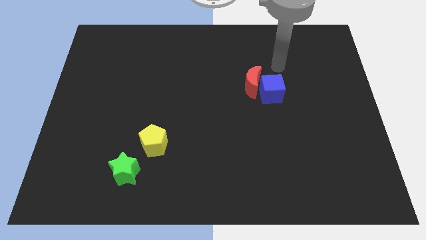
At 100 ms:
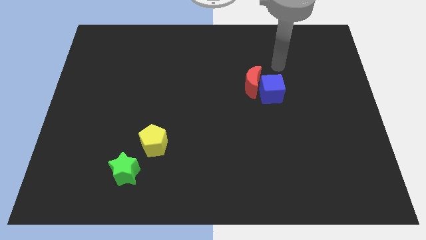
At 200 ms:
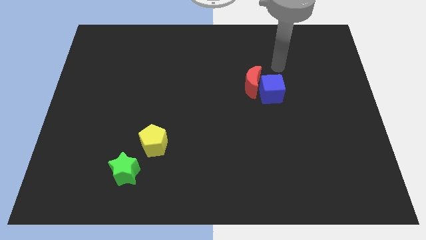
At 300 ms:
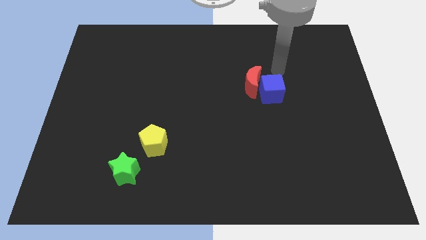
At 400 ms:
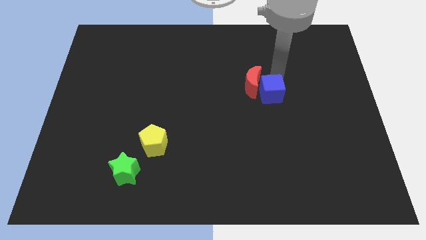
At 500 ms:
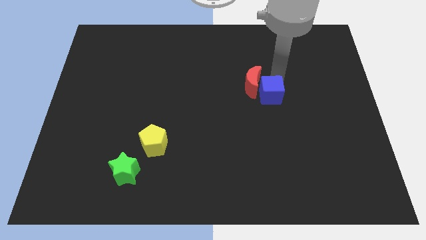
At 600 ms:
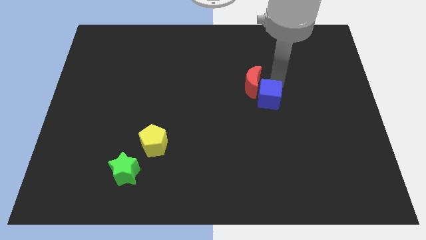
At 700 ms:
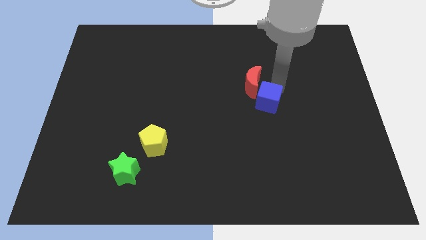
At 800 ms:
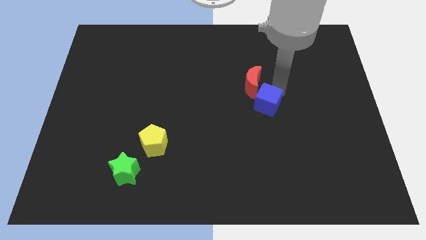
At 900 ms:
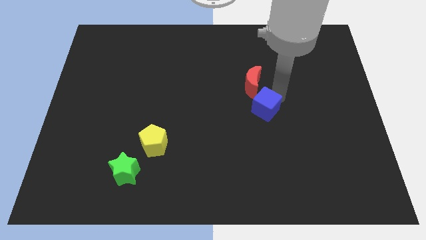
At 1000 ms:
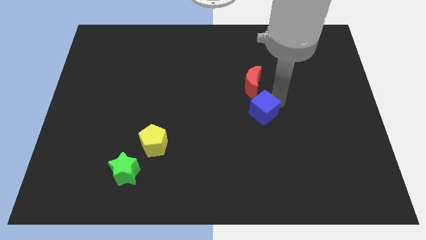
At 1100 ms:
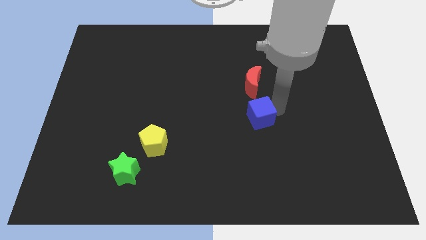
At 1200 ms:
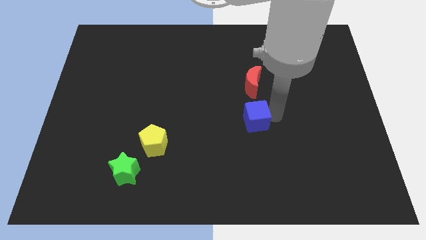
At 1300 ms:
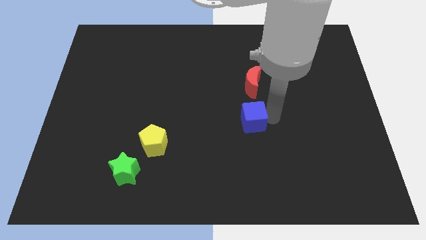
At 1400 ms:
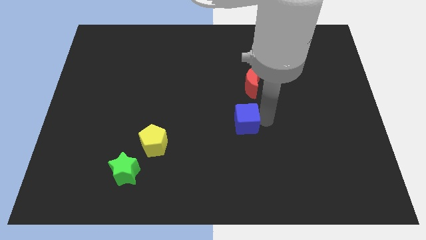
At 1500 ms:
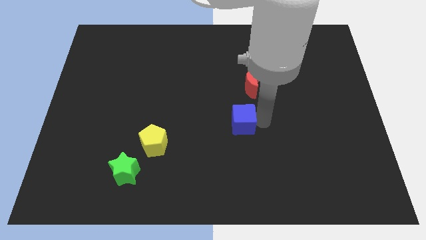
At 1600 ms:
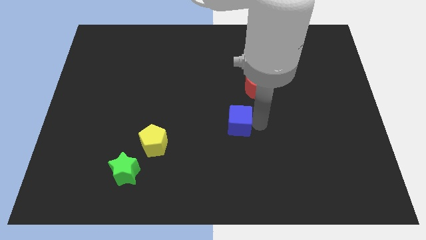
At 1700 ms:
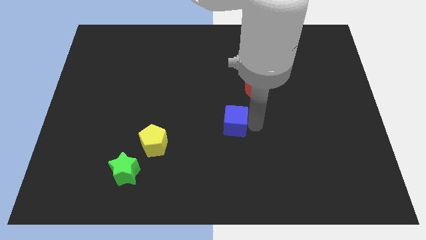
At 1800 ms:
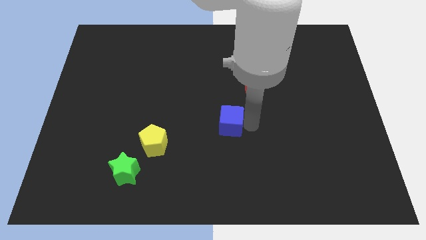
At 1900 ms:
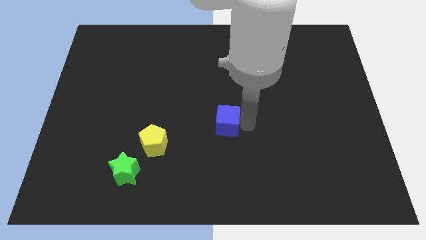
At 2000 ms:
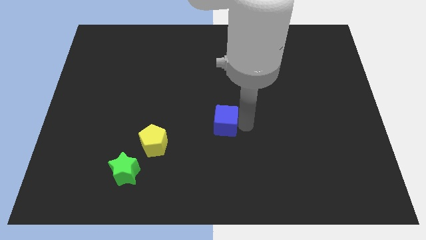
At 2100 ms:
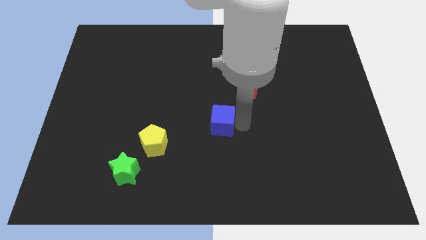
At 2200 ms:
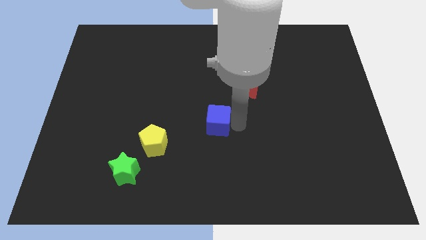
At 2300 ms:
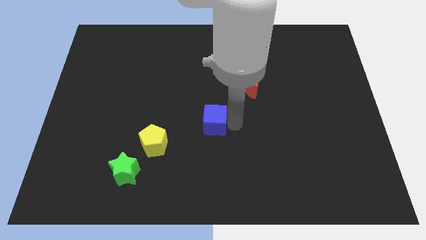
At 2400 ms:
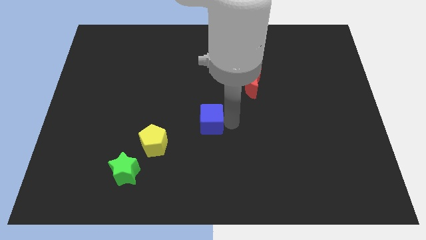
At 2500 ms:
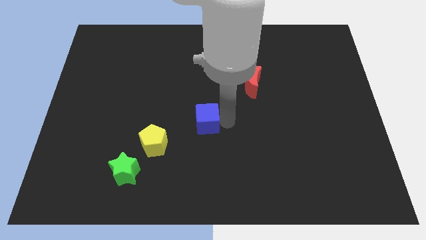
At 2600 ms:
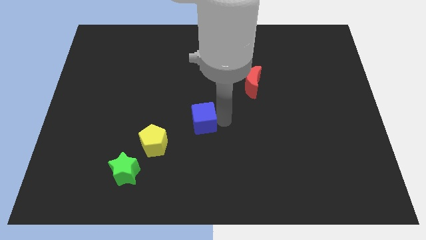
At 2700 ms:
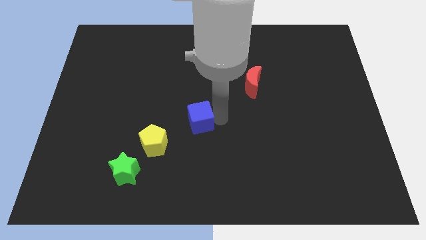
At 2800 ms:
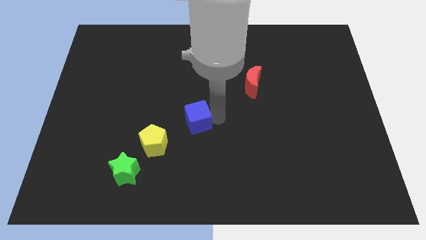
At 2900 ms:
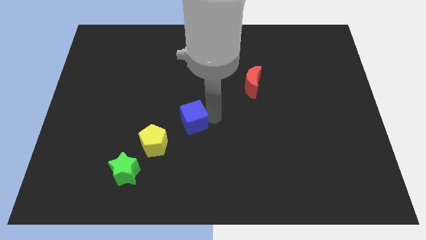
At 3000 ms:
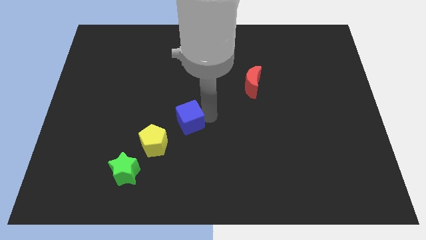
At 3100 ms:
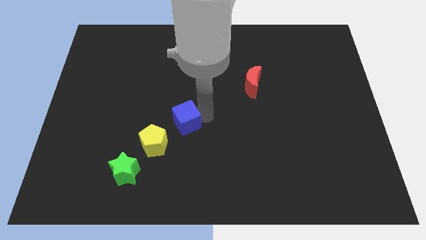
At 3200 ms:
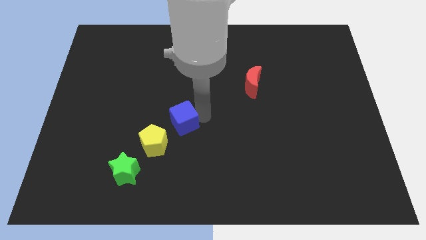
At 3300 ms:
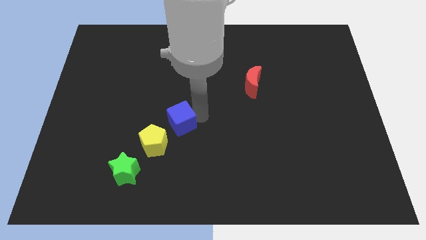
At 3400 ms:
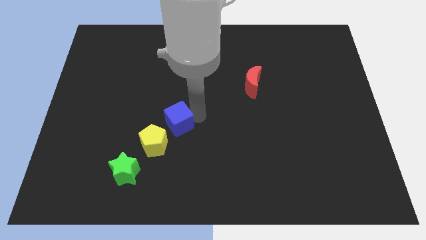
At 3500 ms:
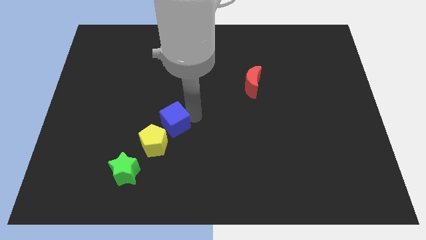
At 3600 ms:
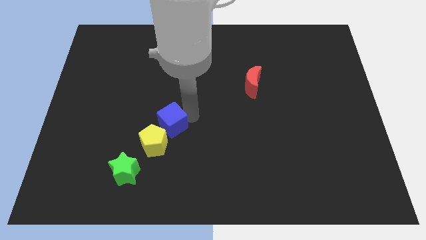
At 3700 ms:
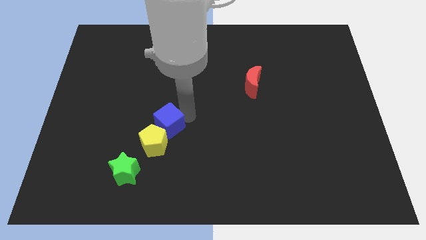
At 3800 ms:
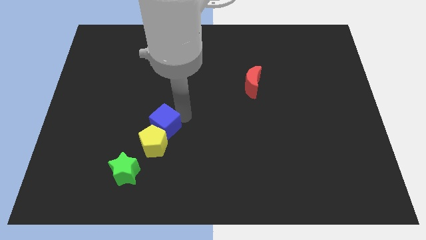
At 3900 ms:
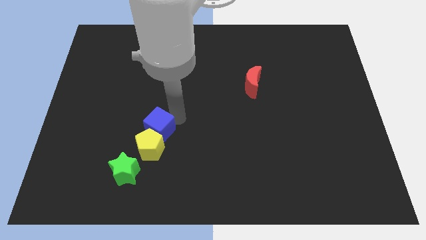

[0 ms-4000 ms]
put the blue cube next to the pentagon

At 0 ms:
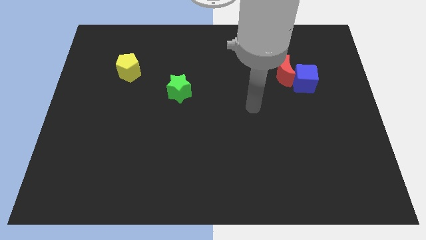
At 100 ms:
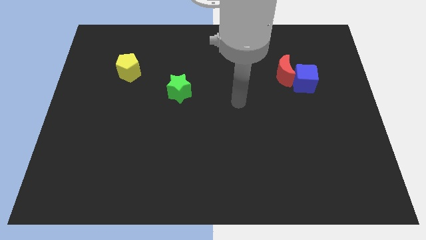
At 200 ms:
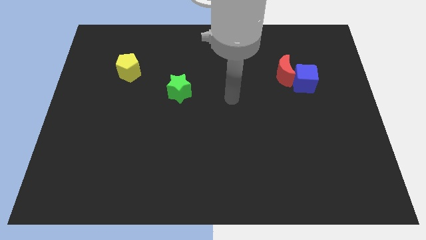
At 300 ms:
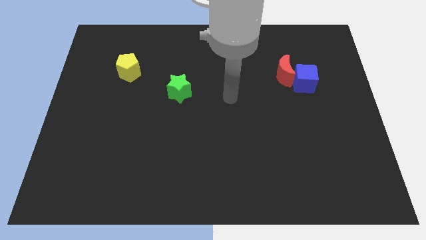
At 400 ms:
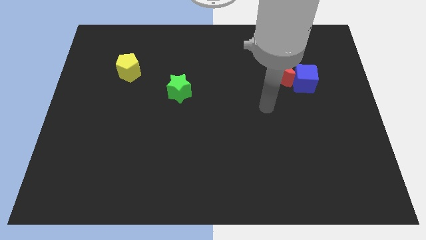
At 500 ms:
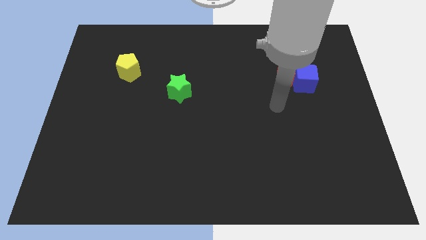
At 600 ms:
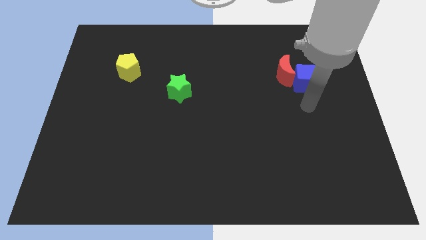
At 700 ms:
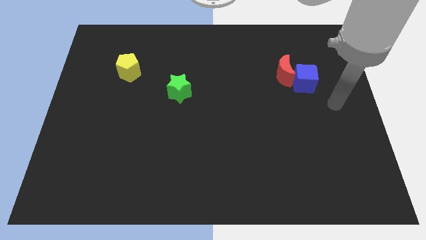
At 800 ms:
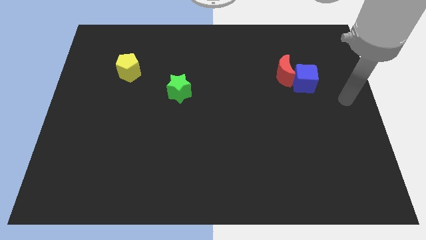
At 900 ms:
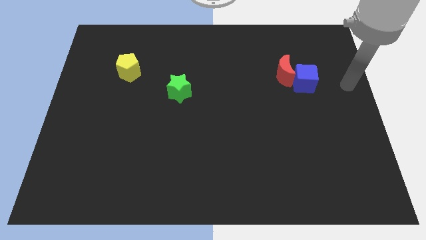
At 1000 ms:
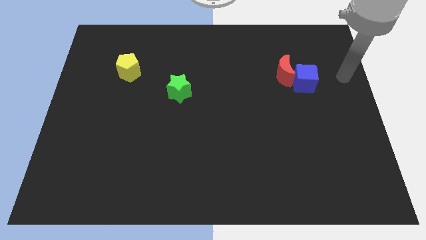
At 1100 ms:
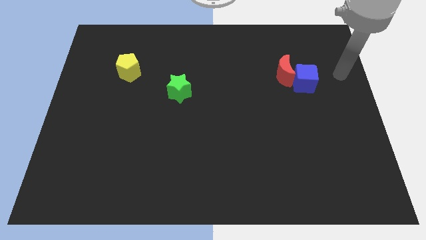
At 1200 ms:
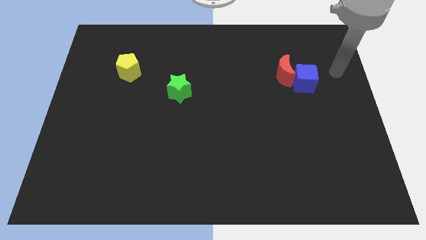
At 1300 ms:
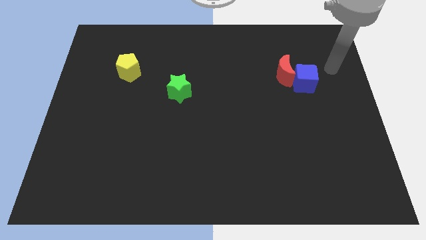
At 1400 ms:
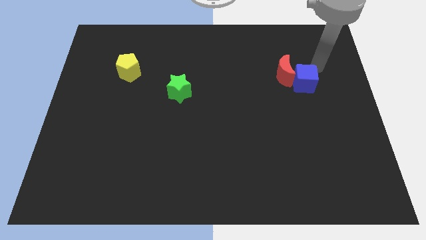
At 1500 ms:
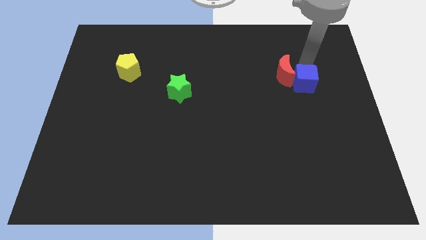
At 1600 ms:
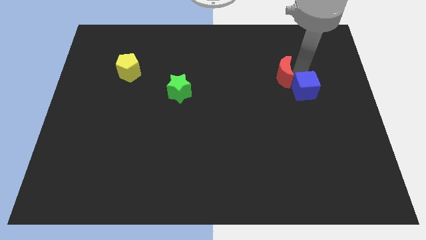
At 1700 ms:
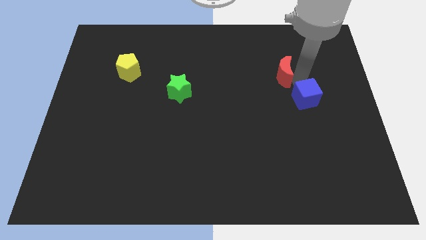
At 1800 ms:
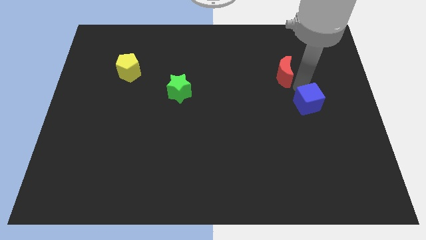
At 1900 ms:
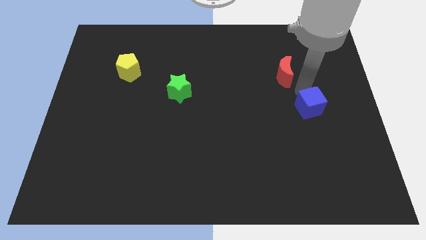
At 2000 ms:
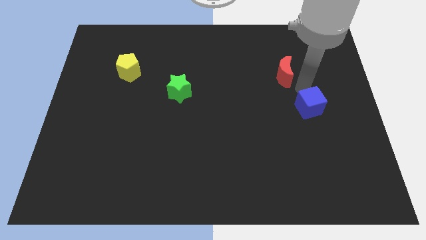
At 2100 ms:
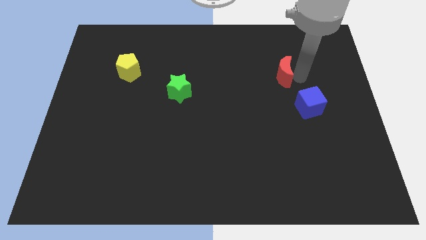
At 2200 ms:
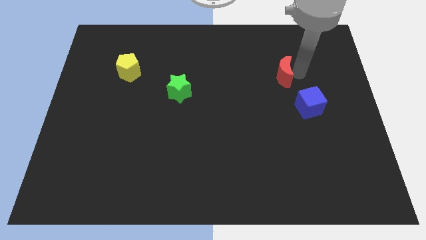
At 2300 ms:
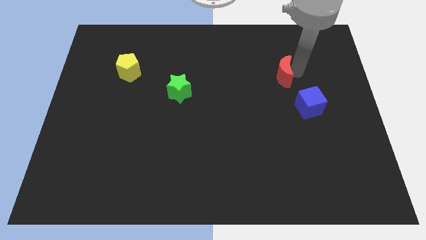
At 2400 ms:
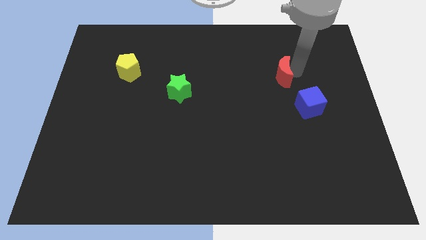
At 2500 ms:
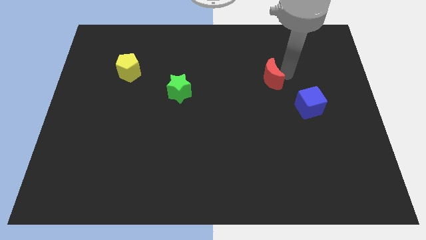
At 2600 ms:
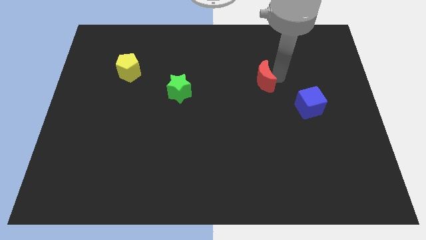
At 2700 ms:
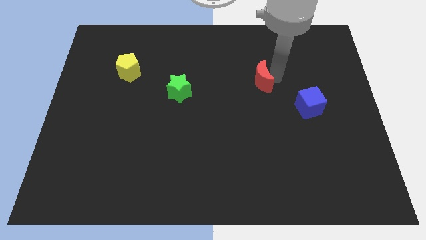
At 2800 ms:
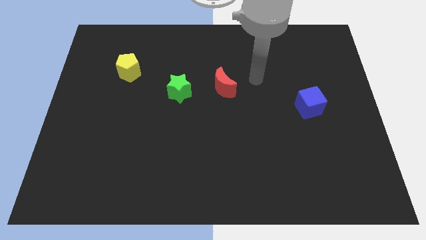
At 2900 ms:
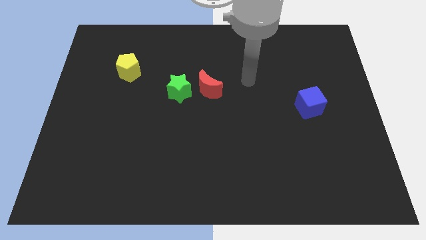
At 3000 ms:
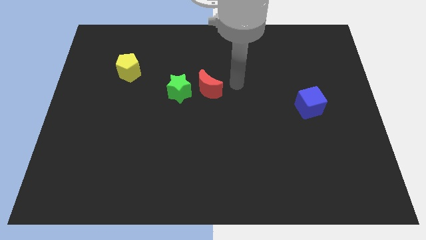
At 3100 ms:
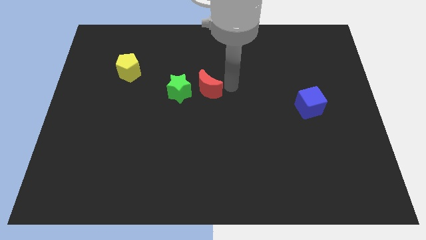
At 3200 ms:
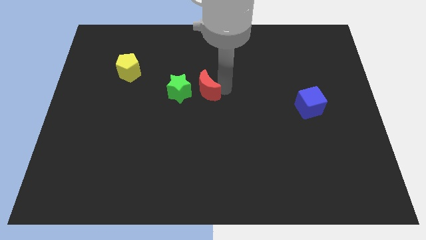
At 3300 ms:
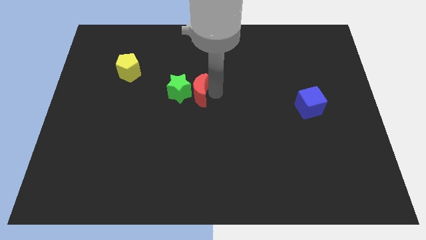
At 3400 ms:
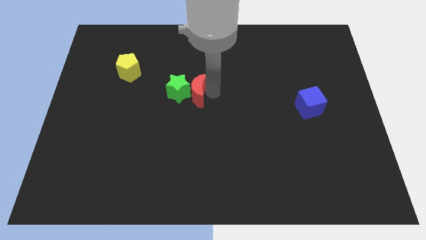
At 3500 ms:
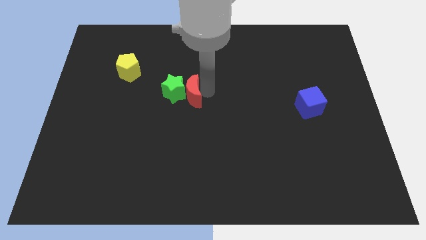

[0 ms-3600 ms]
put the red block close to the green block

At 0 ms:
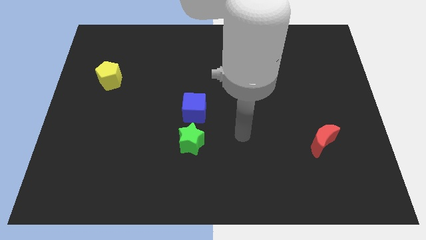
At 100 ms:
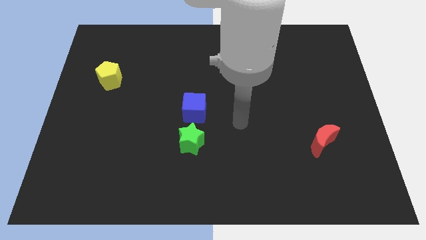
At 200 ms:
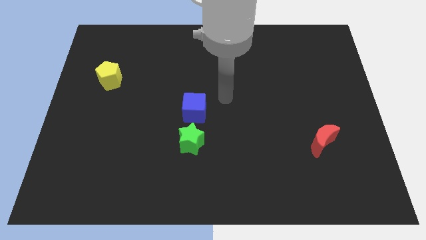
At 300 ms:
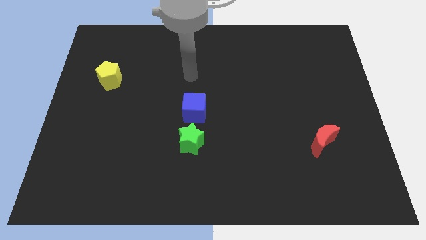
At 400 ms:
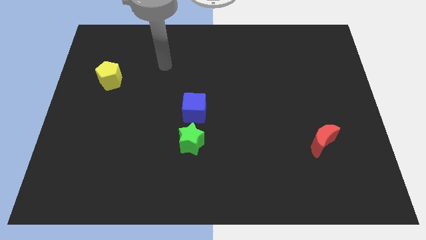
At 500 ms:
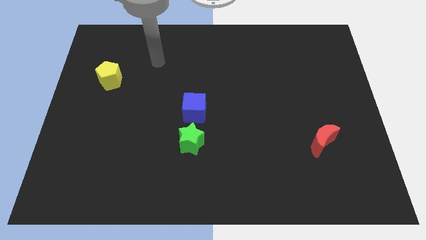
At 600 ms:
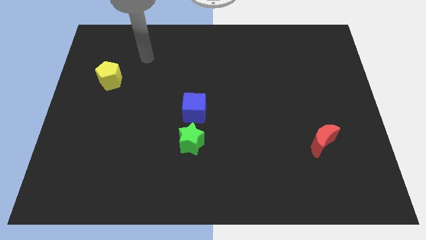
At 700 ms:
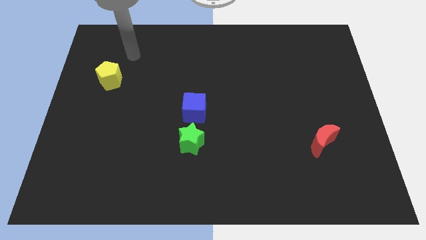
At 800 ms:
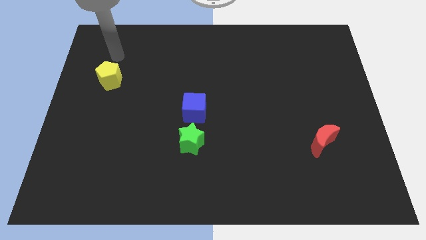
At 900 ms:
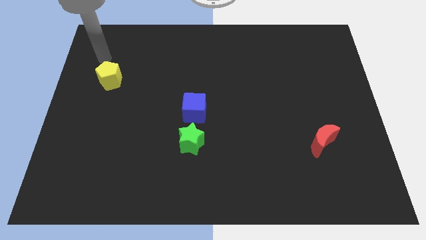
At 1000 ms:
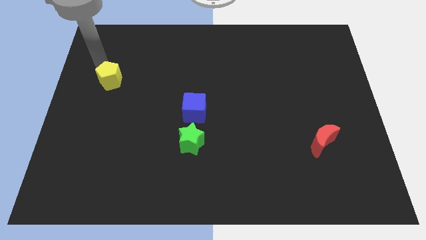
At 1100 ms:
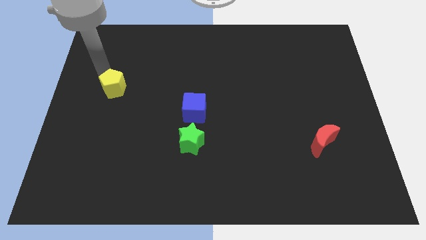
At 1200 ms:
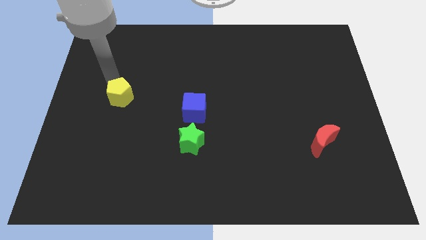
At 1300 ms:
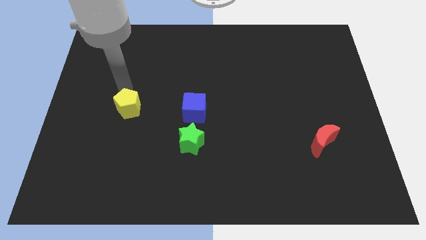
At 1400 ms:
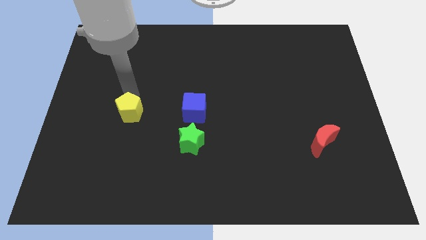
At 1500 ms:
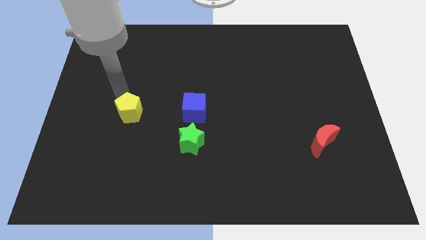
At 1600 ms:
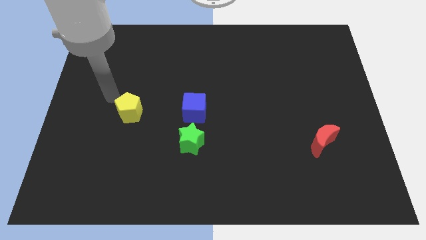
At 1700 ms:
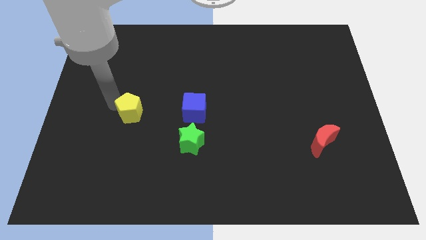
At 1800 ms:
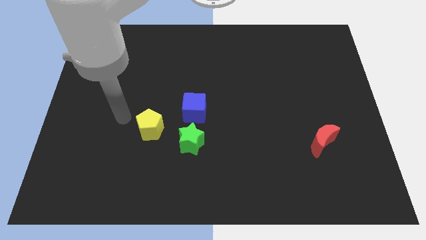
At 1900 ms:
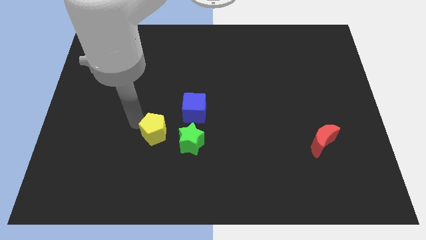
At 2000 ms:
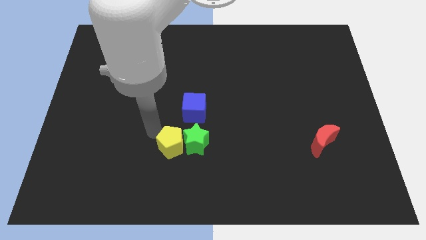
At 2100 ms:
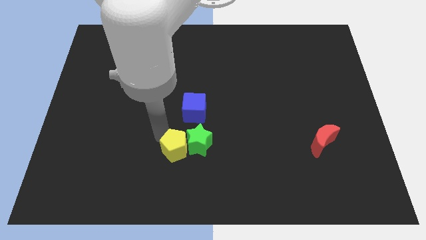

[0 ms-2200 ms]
put the yellow pentagon close to the green block
